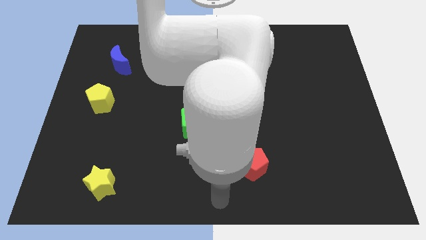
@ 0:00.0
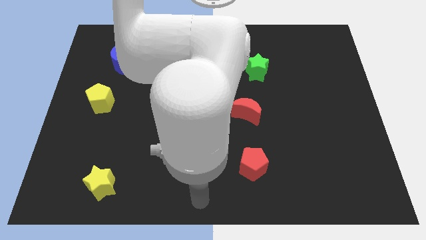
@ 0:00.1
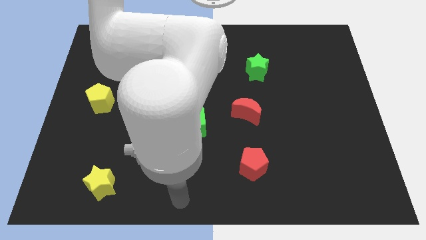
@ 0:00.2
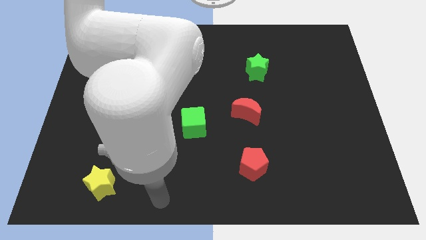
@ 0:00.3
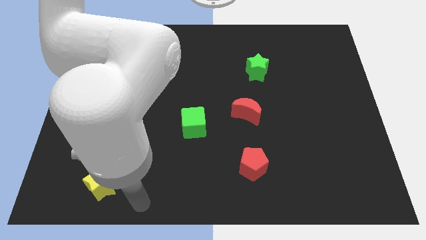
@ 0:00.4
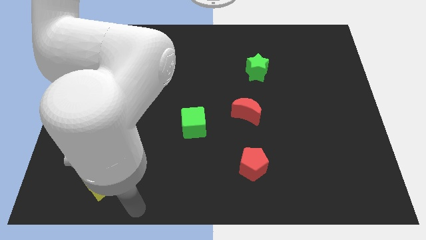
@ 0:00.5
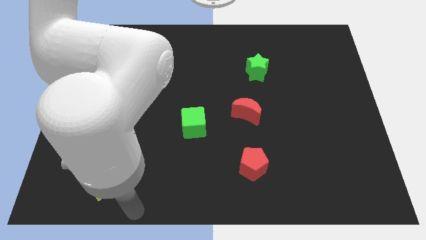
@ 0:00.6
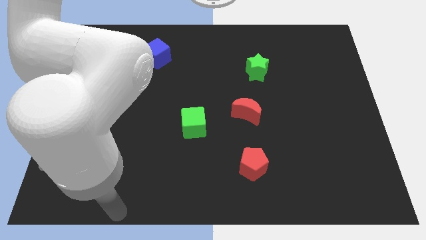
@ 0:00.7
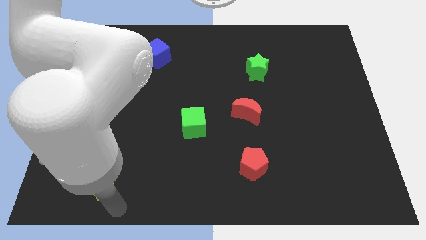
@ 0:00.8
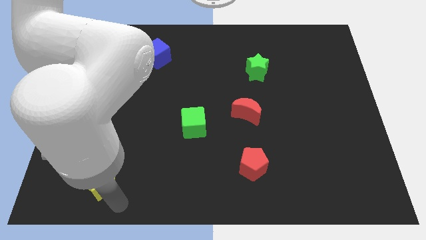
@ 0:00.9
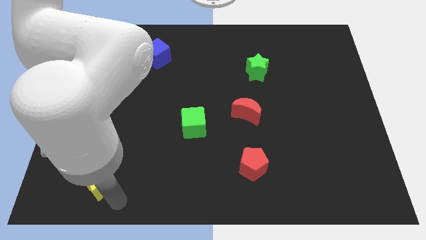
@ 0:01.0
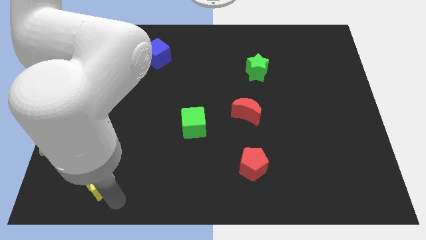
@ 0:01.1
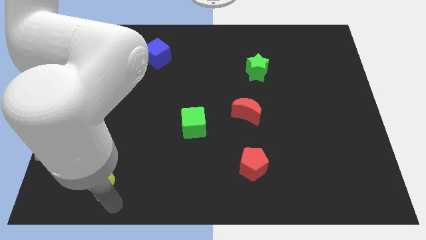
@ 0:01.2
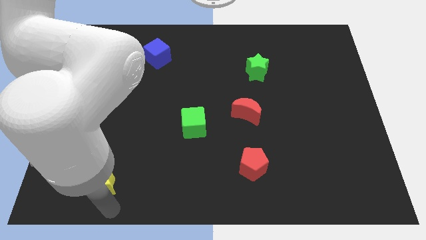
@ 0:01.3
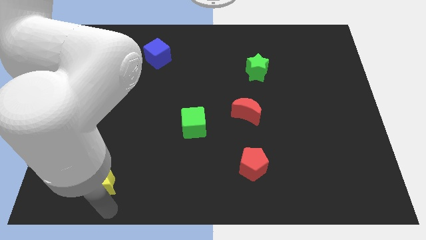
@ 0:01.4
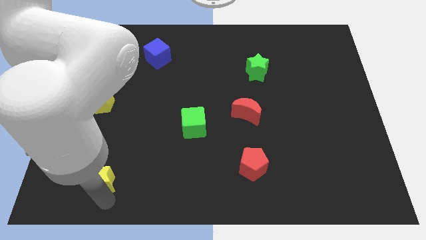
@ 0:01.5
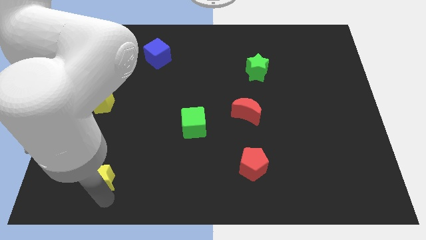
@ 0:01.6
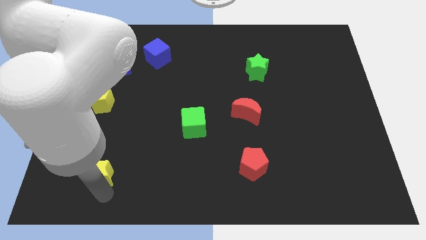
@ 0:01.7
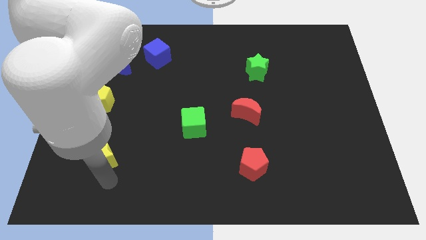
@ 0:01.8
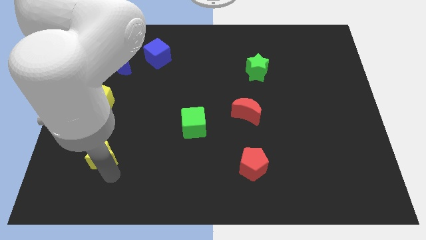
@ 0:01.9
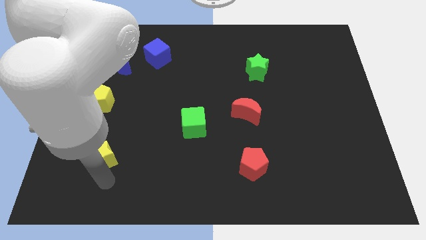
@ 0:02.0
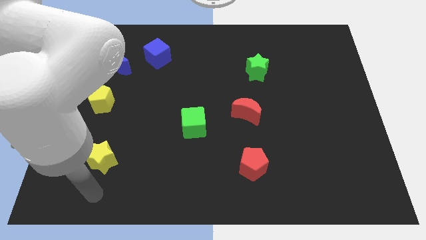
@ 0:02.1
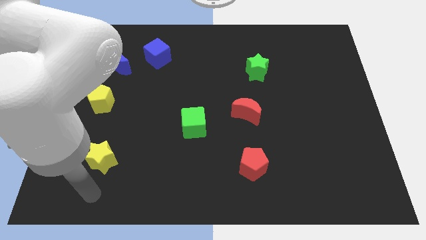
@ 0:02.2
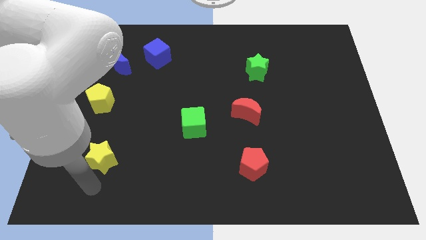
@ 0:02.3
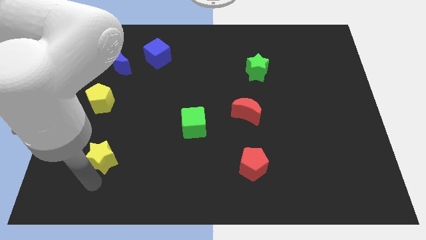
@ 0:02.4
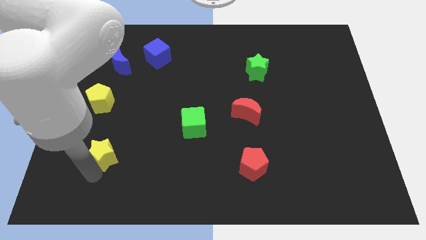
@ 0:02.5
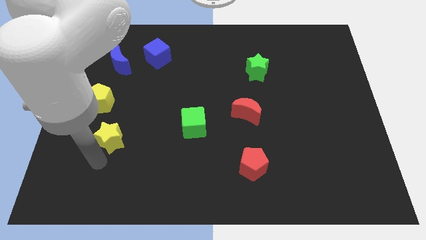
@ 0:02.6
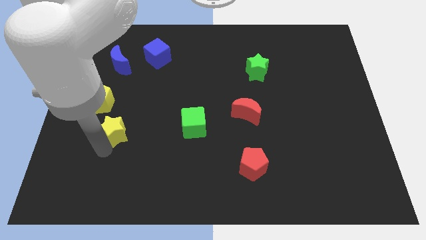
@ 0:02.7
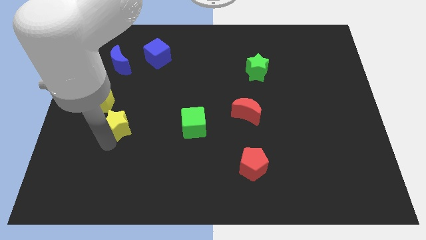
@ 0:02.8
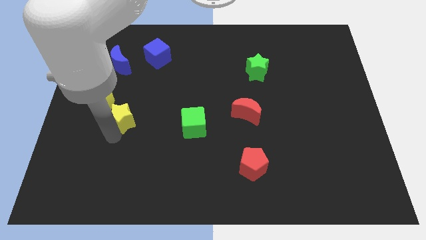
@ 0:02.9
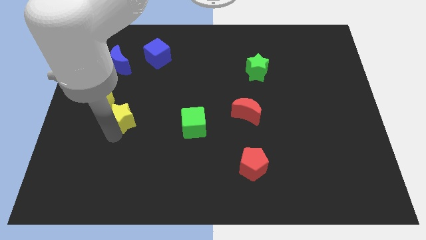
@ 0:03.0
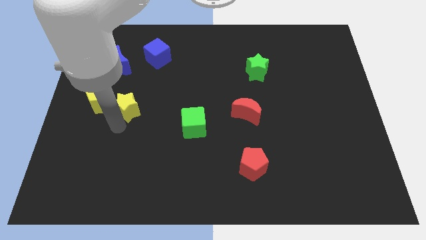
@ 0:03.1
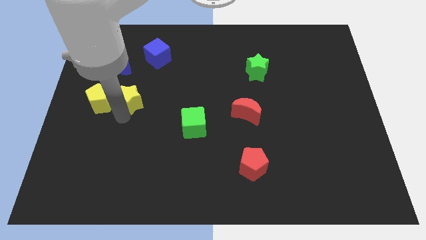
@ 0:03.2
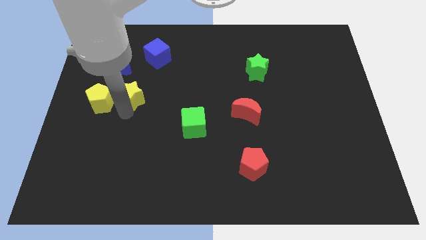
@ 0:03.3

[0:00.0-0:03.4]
move the yellow star to the right of the yellow pentagon

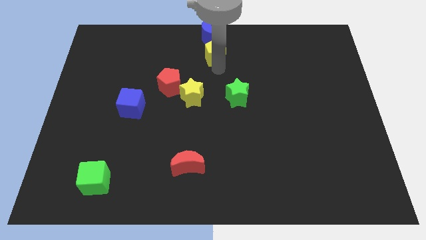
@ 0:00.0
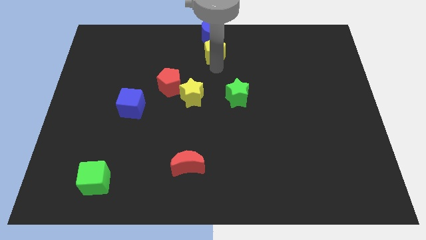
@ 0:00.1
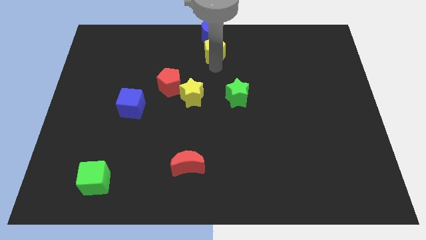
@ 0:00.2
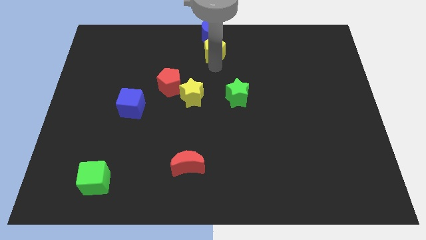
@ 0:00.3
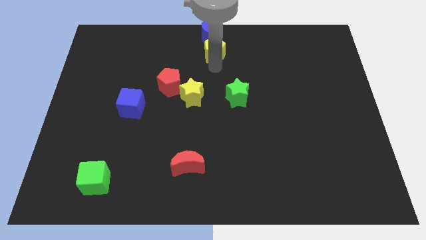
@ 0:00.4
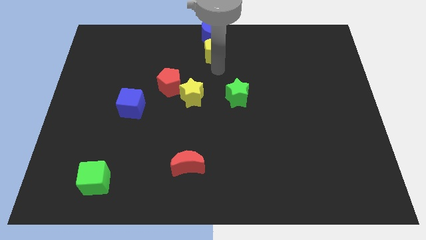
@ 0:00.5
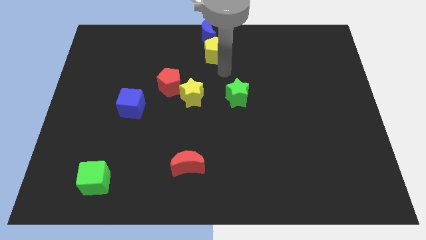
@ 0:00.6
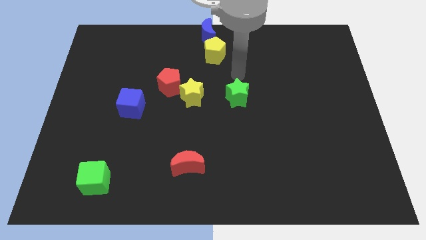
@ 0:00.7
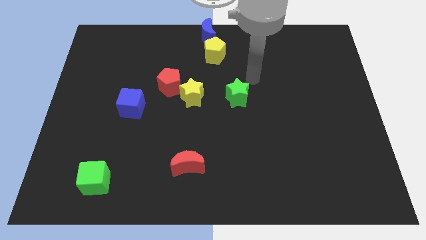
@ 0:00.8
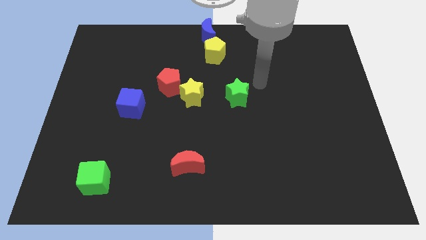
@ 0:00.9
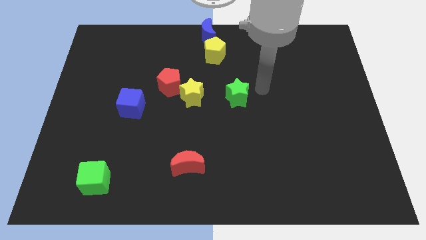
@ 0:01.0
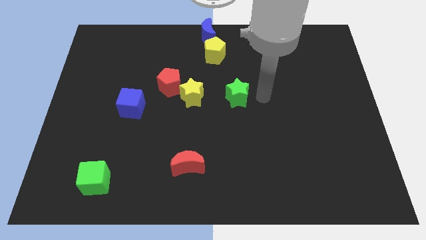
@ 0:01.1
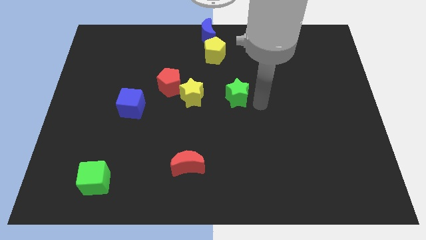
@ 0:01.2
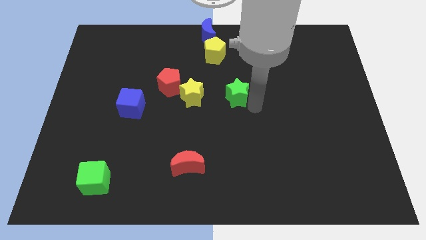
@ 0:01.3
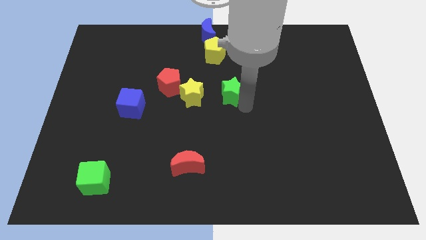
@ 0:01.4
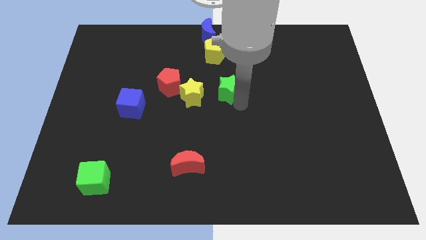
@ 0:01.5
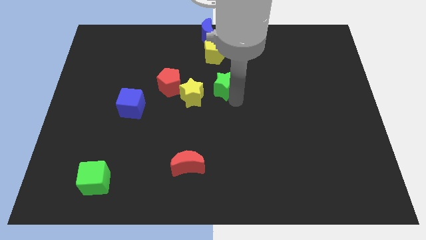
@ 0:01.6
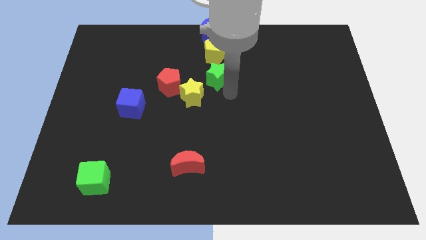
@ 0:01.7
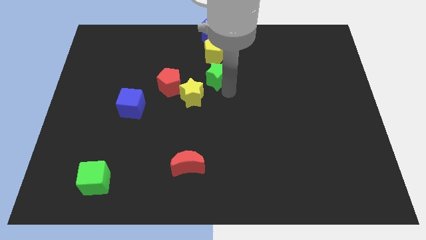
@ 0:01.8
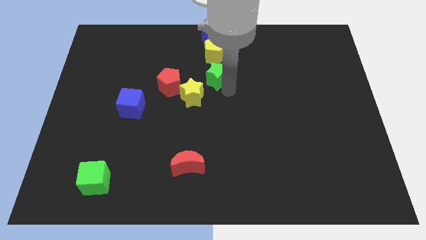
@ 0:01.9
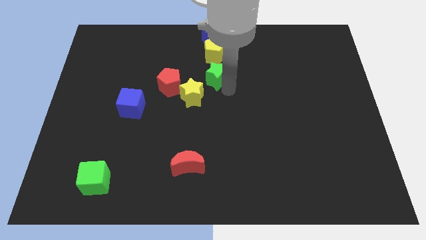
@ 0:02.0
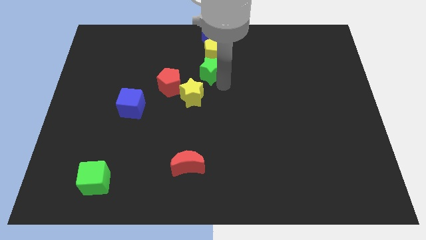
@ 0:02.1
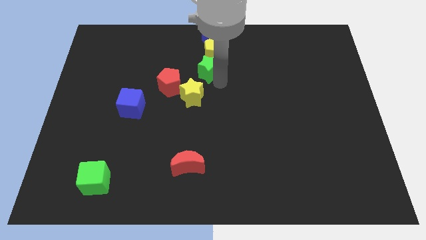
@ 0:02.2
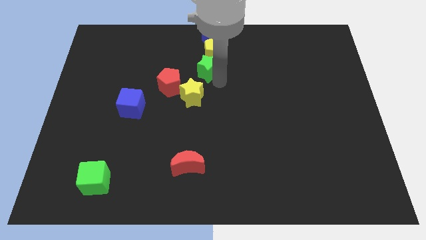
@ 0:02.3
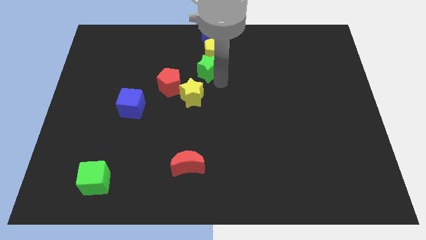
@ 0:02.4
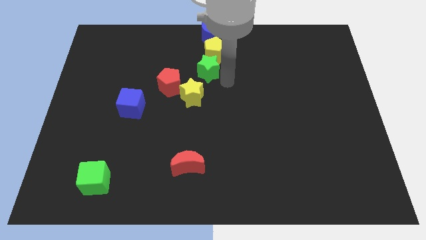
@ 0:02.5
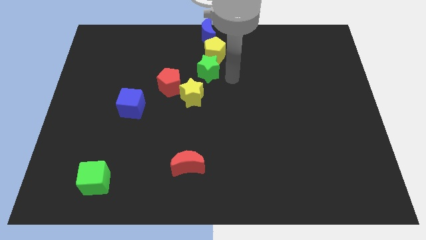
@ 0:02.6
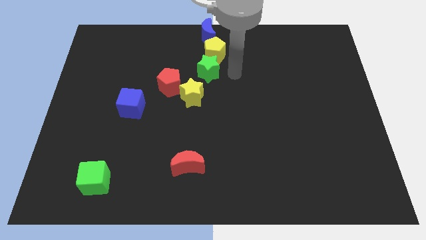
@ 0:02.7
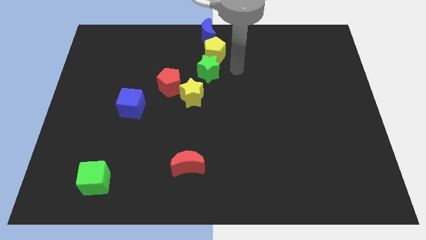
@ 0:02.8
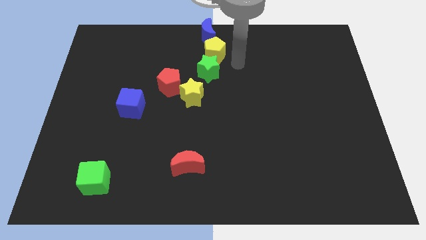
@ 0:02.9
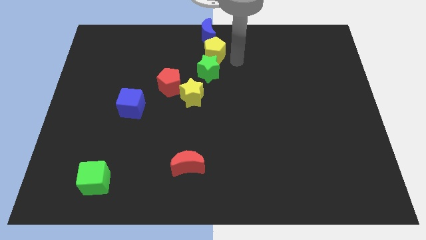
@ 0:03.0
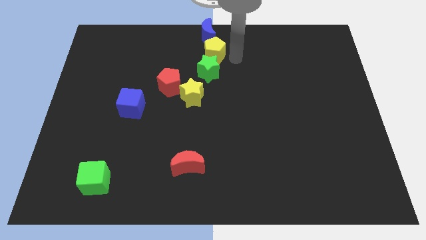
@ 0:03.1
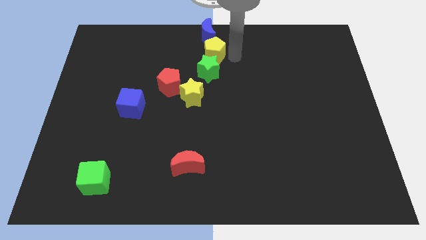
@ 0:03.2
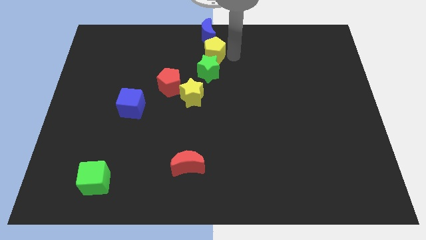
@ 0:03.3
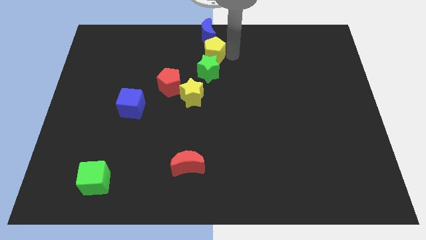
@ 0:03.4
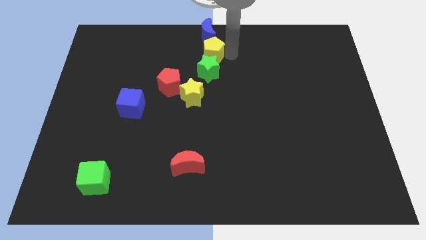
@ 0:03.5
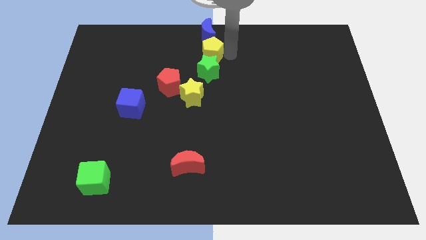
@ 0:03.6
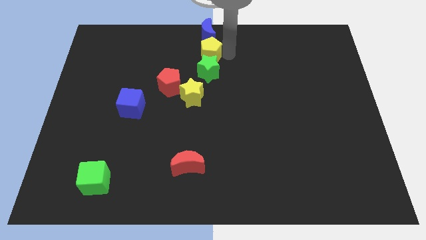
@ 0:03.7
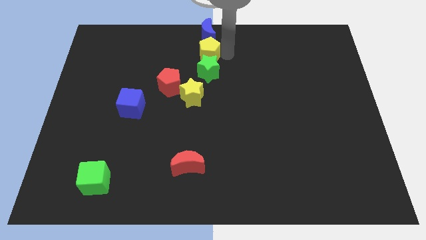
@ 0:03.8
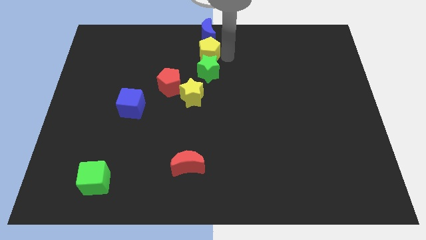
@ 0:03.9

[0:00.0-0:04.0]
push the green star to the bottom side of the yellow pentagon

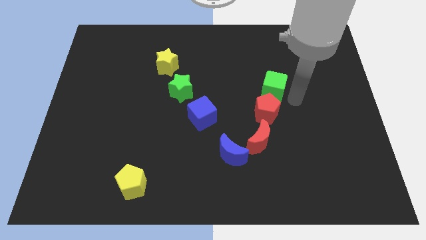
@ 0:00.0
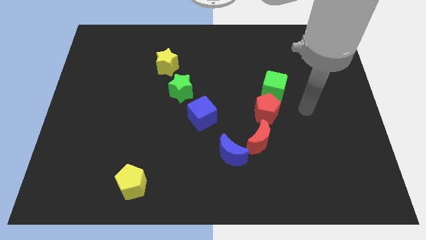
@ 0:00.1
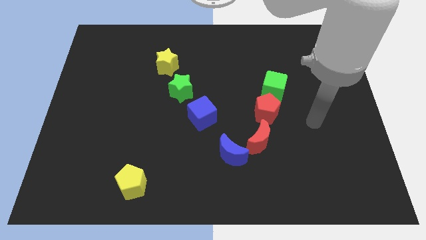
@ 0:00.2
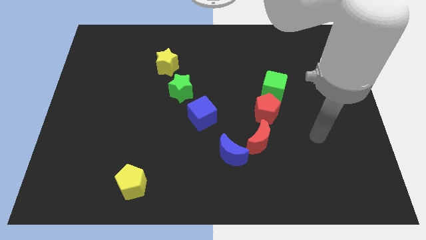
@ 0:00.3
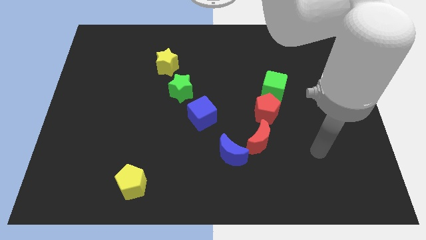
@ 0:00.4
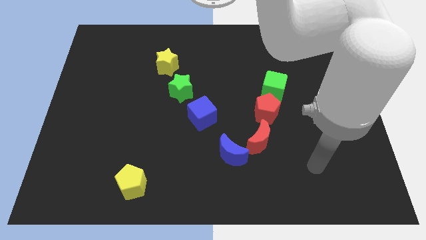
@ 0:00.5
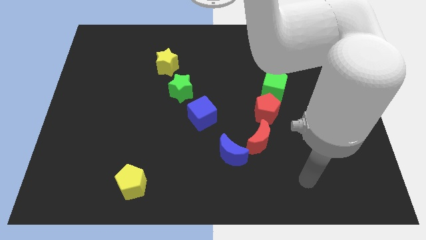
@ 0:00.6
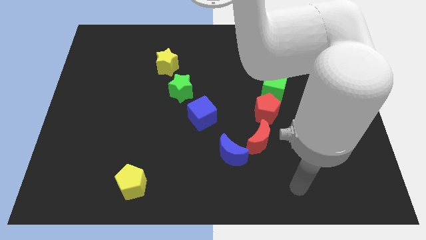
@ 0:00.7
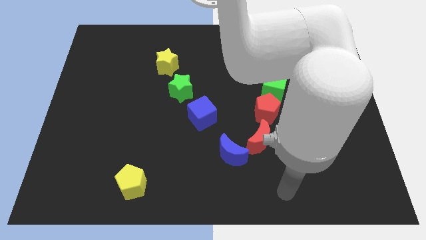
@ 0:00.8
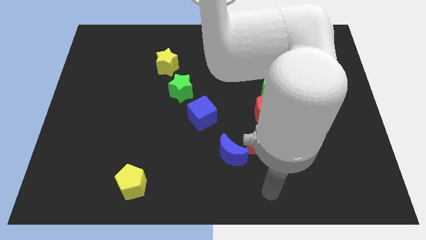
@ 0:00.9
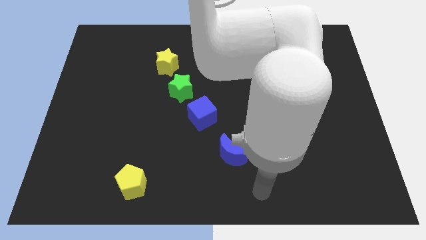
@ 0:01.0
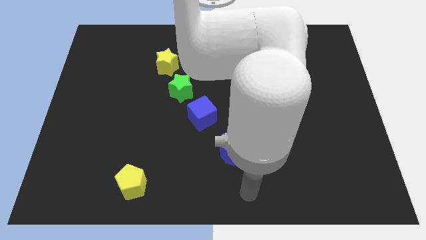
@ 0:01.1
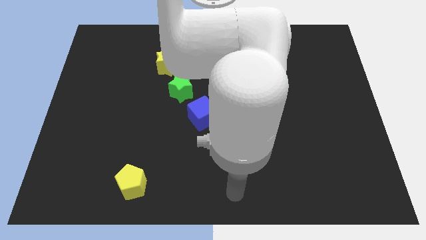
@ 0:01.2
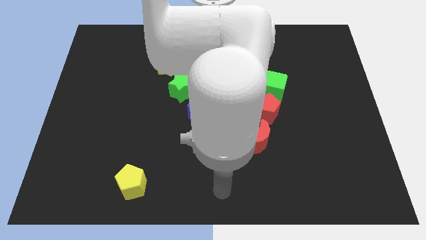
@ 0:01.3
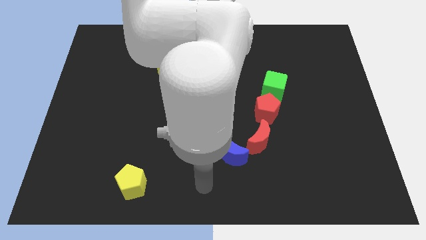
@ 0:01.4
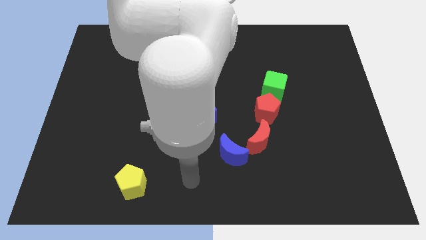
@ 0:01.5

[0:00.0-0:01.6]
move your arm towards yellow pentagon

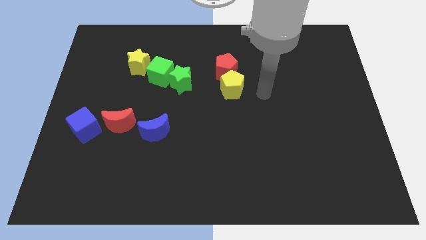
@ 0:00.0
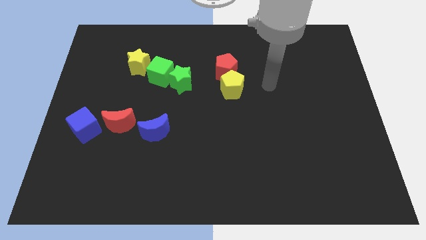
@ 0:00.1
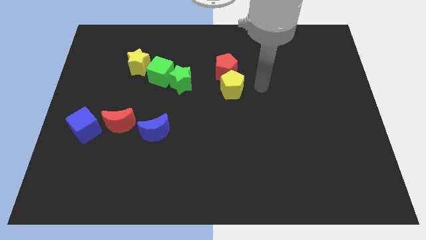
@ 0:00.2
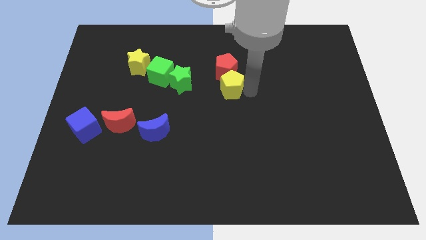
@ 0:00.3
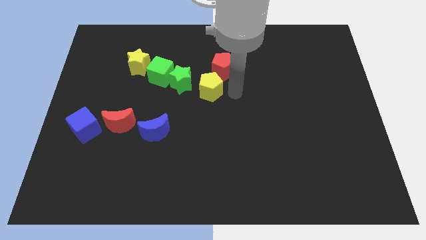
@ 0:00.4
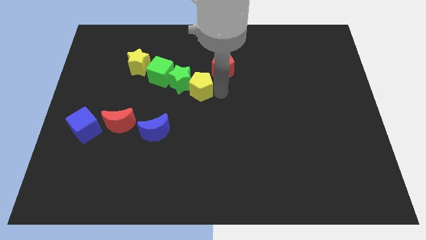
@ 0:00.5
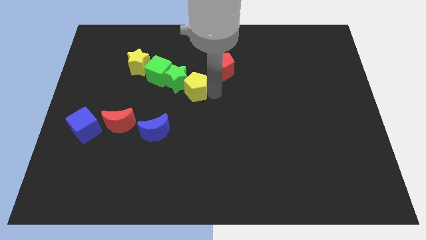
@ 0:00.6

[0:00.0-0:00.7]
push the yellow pentagon towards the green star
